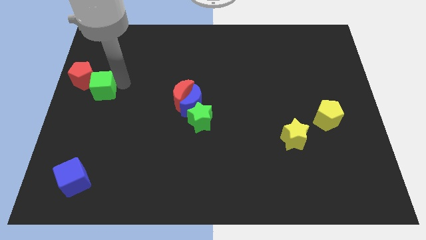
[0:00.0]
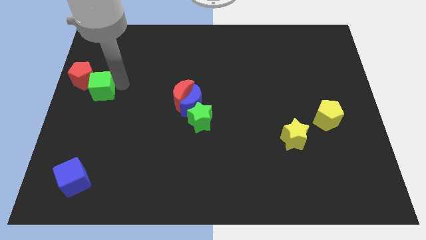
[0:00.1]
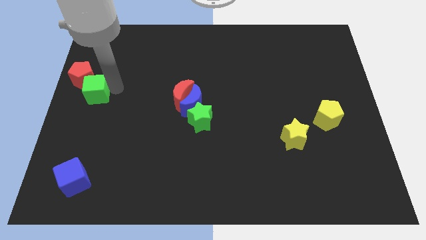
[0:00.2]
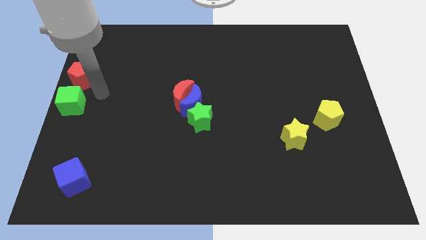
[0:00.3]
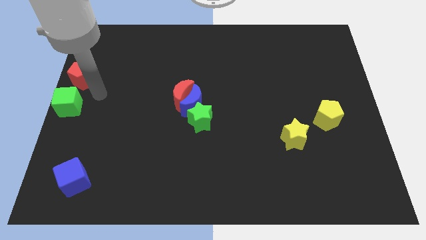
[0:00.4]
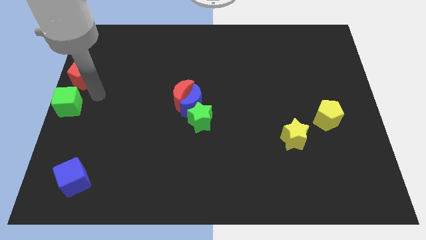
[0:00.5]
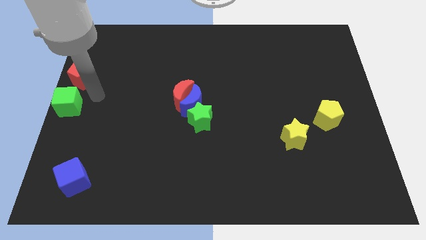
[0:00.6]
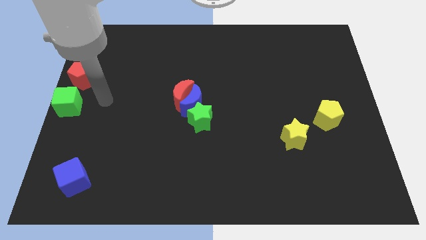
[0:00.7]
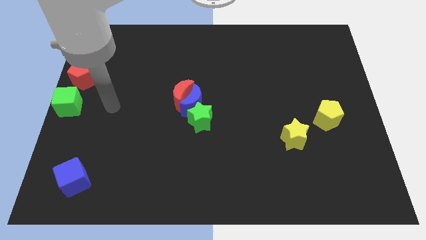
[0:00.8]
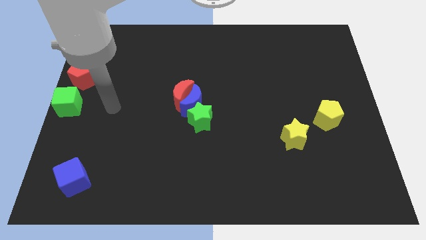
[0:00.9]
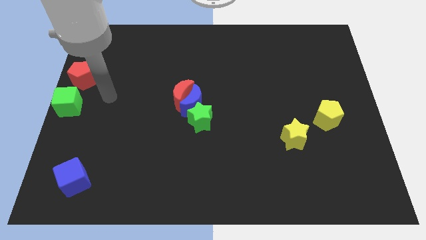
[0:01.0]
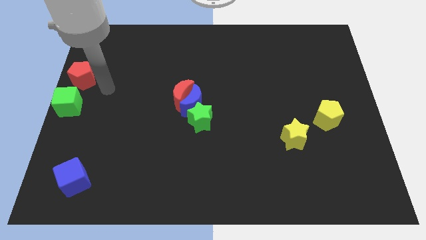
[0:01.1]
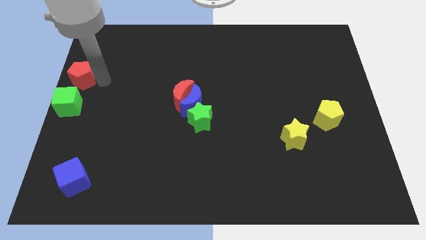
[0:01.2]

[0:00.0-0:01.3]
move green cube to the center left of the board

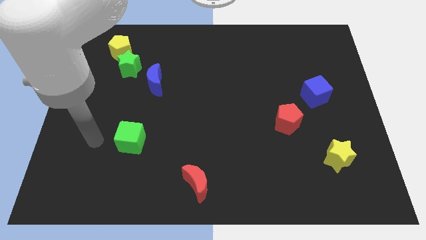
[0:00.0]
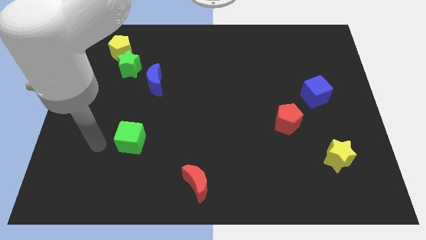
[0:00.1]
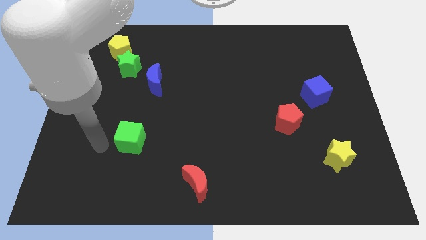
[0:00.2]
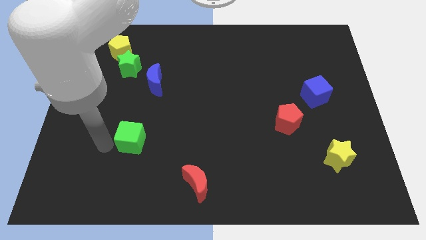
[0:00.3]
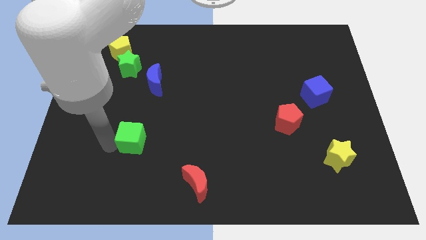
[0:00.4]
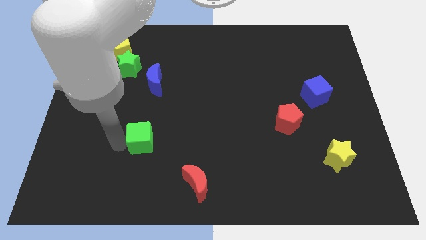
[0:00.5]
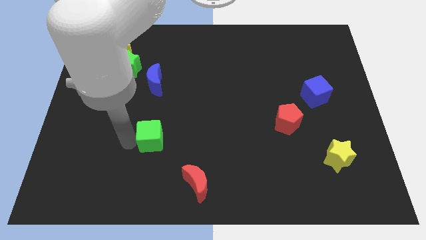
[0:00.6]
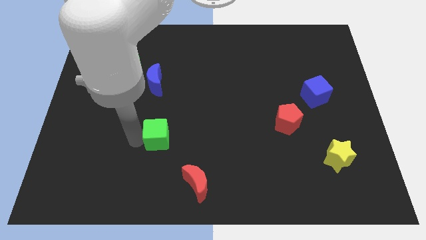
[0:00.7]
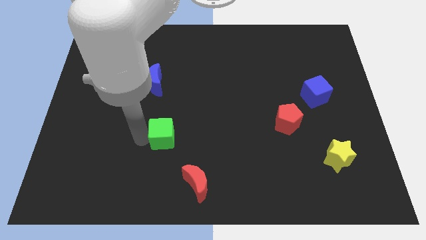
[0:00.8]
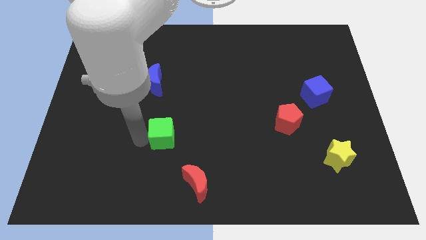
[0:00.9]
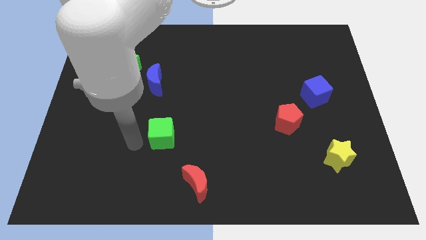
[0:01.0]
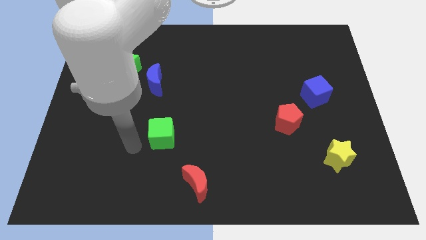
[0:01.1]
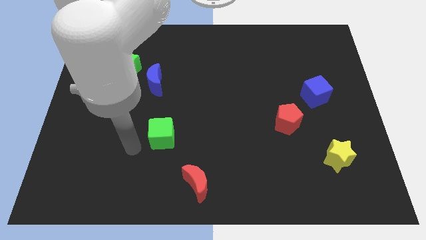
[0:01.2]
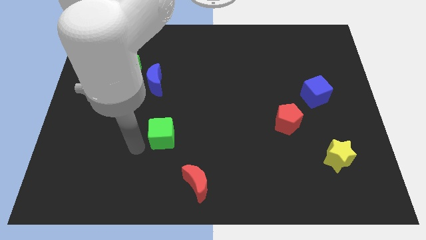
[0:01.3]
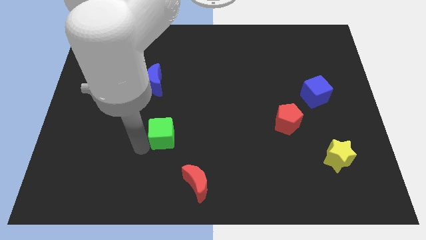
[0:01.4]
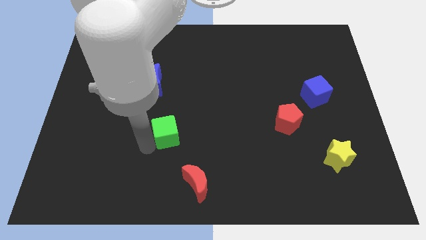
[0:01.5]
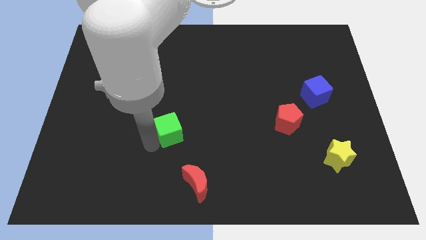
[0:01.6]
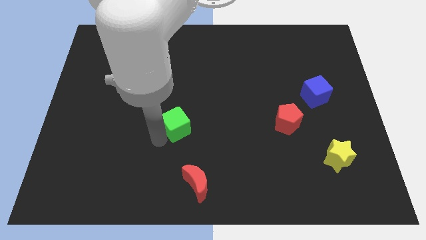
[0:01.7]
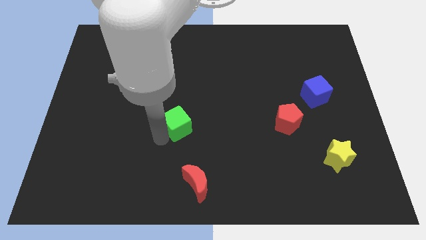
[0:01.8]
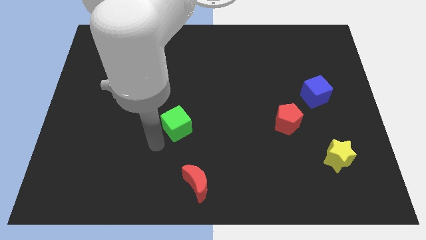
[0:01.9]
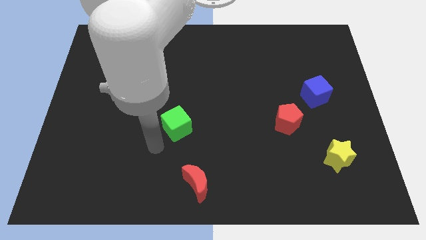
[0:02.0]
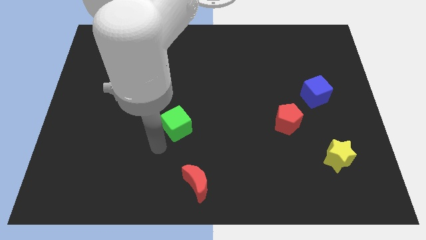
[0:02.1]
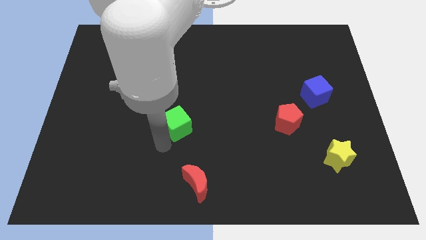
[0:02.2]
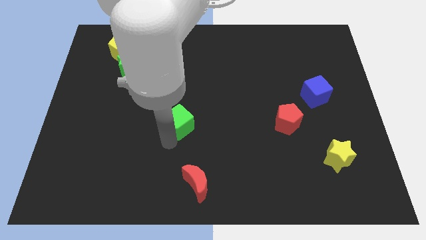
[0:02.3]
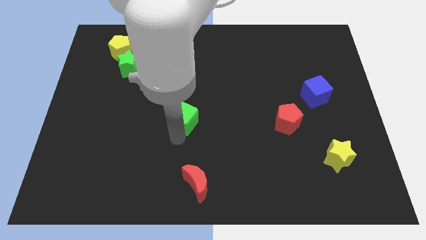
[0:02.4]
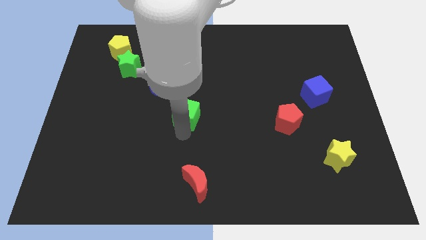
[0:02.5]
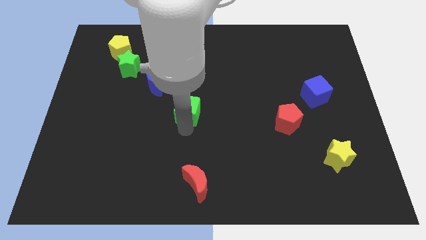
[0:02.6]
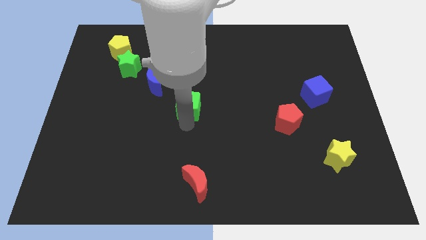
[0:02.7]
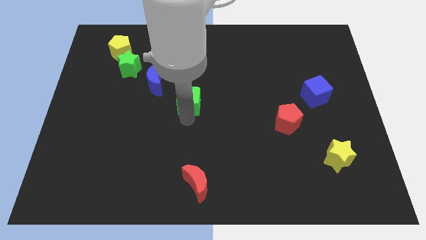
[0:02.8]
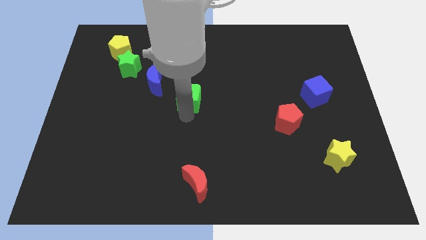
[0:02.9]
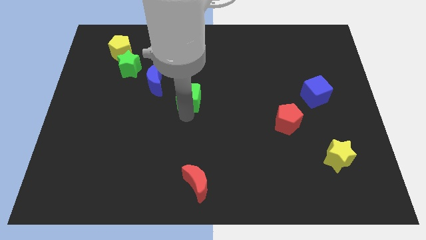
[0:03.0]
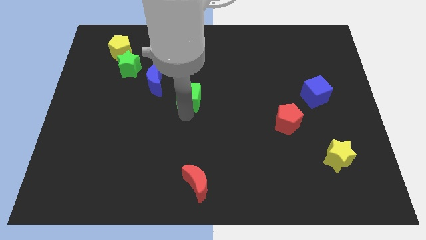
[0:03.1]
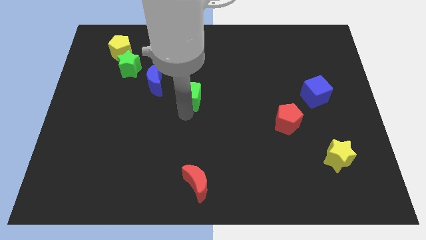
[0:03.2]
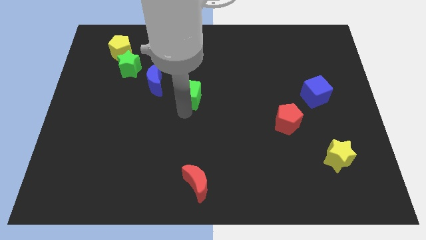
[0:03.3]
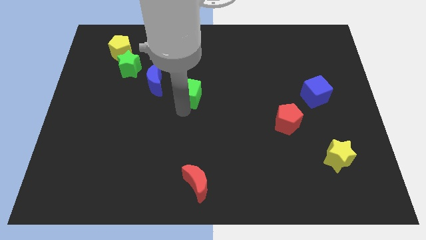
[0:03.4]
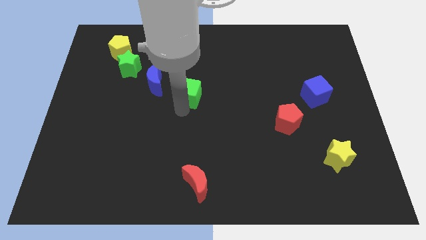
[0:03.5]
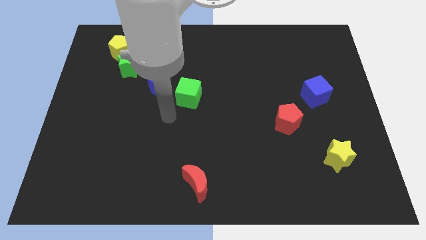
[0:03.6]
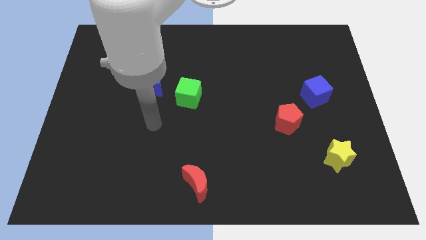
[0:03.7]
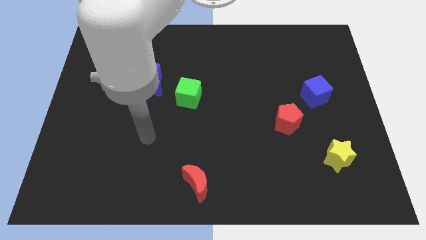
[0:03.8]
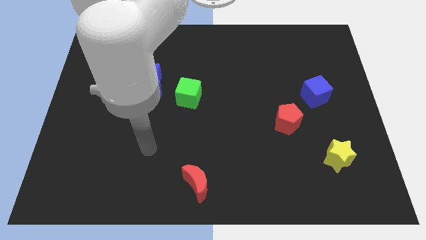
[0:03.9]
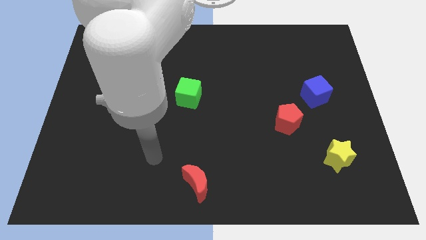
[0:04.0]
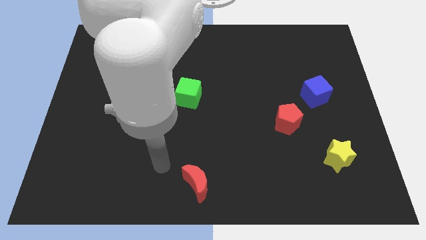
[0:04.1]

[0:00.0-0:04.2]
place the green cube to the right of the blue moon

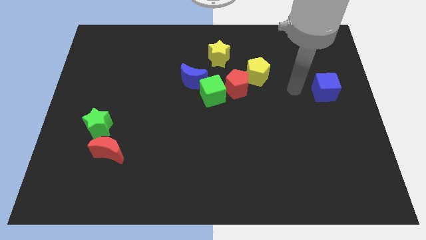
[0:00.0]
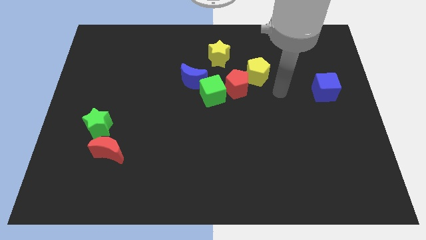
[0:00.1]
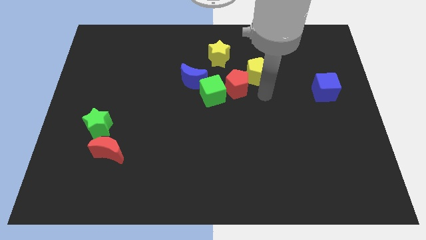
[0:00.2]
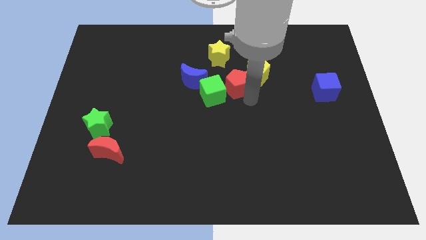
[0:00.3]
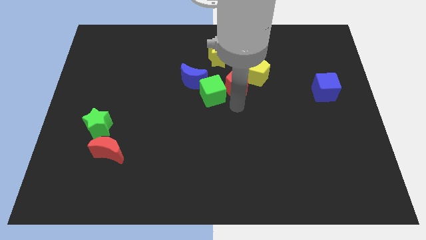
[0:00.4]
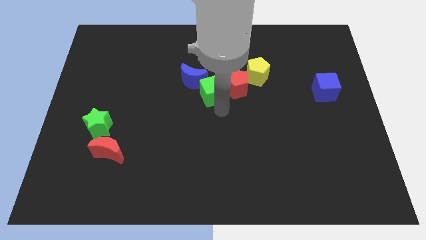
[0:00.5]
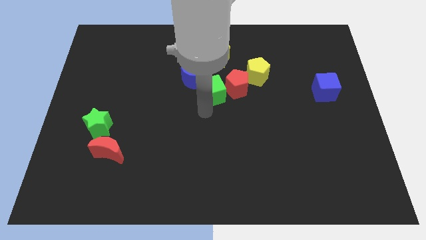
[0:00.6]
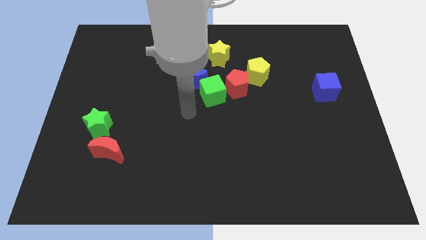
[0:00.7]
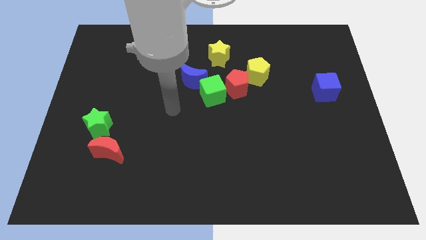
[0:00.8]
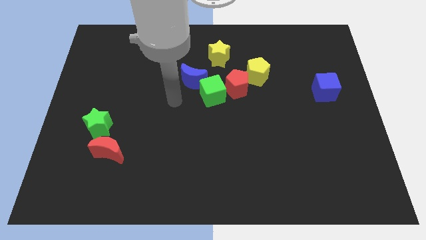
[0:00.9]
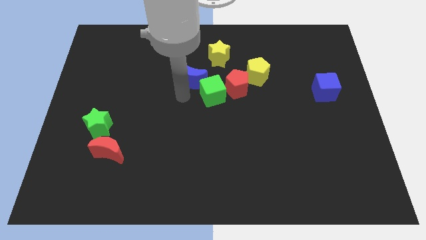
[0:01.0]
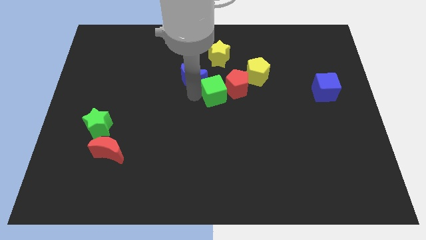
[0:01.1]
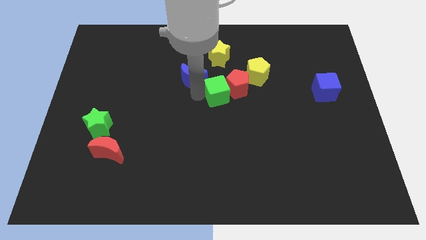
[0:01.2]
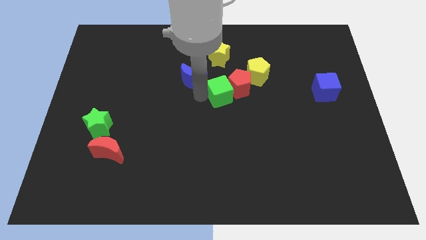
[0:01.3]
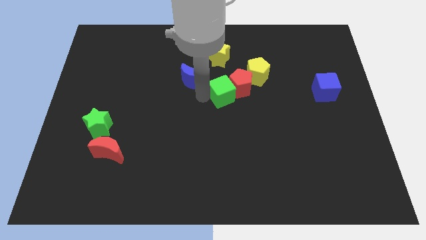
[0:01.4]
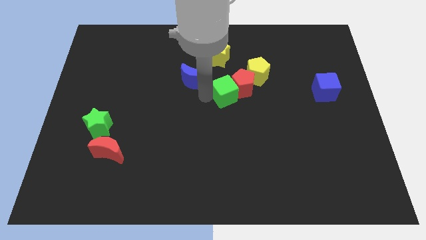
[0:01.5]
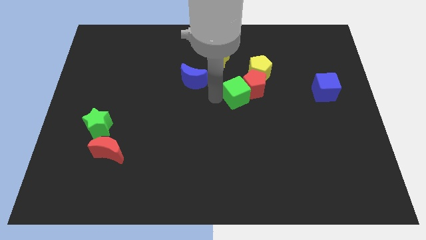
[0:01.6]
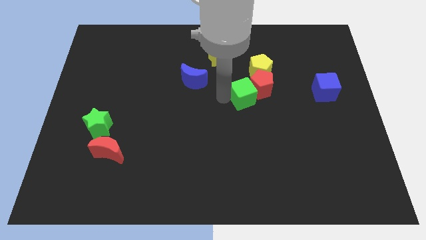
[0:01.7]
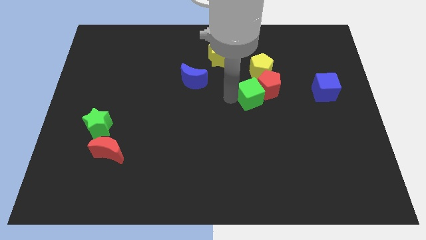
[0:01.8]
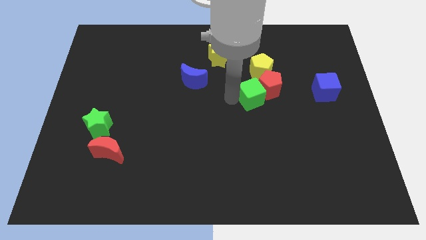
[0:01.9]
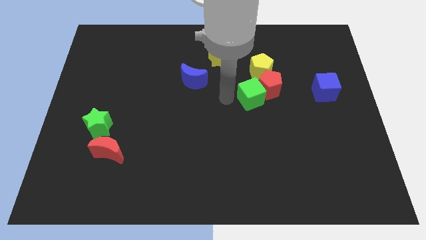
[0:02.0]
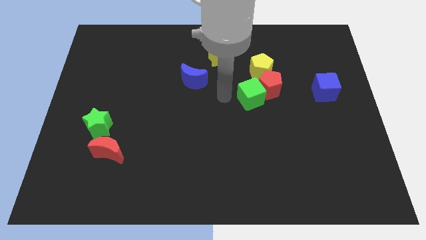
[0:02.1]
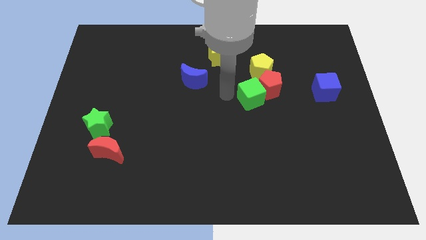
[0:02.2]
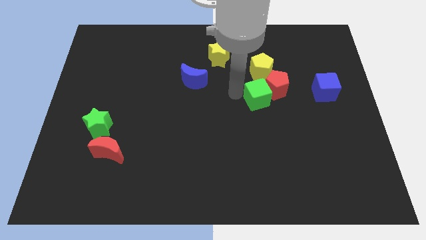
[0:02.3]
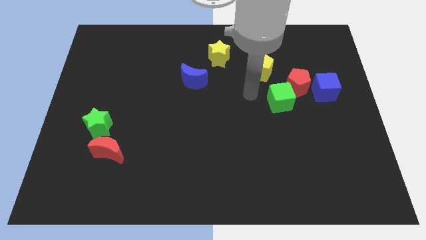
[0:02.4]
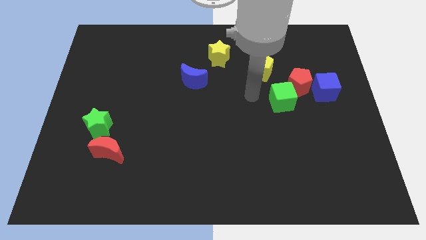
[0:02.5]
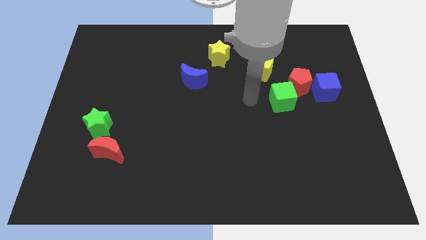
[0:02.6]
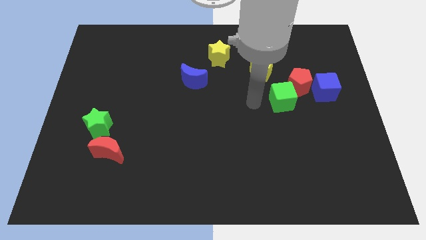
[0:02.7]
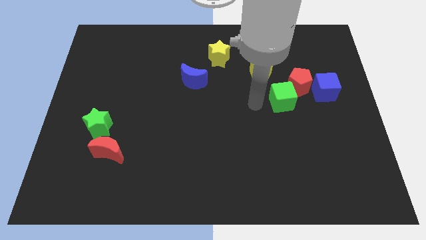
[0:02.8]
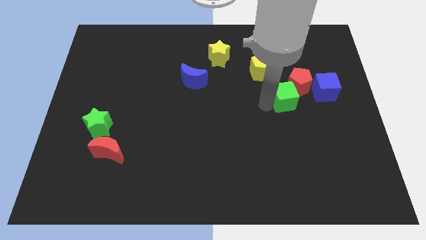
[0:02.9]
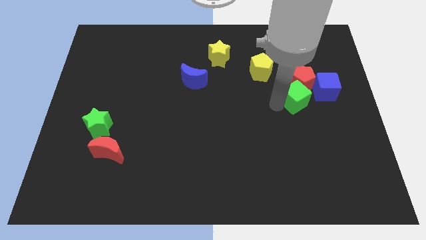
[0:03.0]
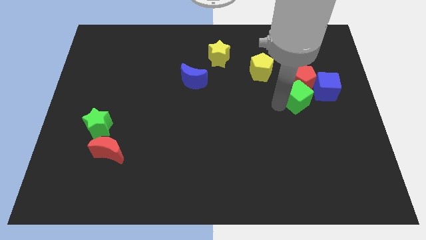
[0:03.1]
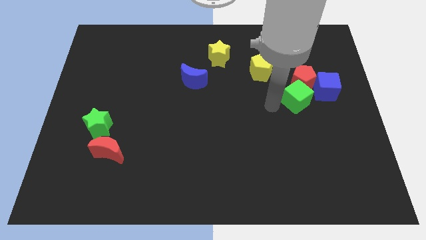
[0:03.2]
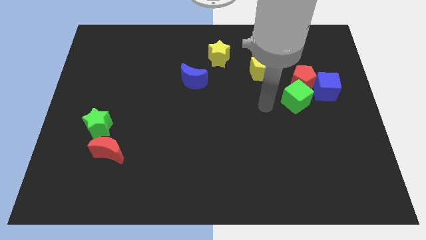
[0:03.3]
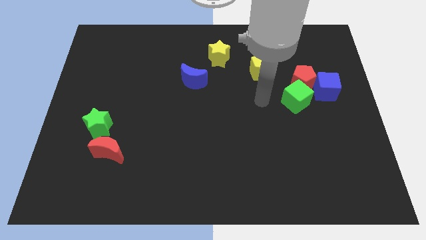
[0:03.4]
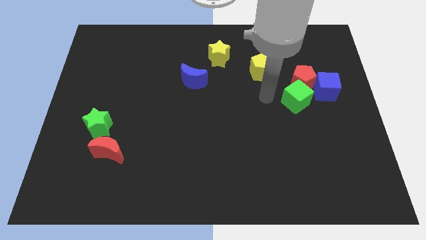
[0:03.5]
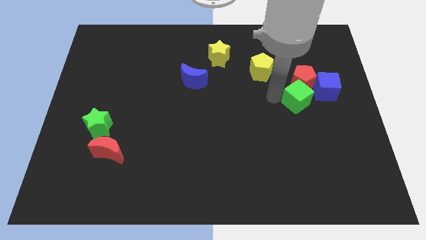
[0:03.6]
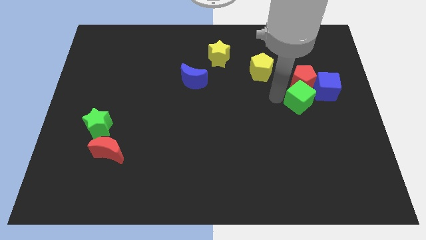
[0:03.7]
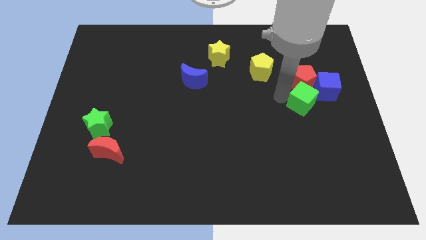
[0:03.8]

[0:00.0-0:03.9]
move the green cube below the red pentagon
